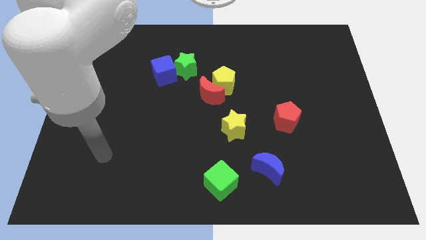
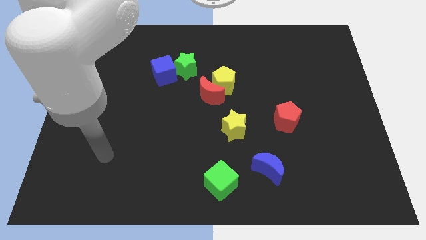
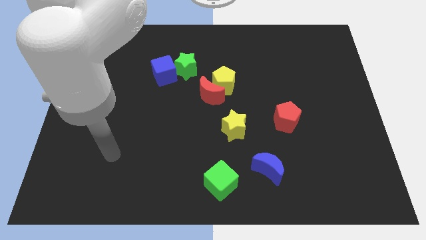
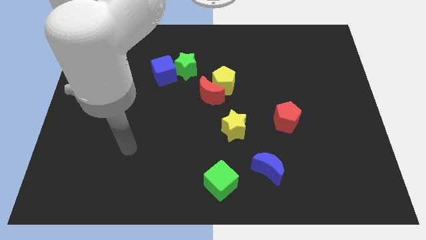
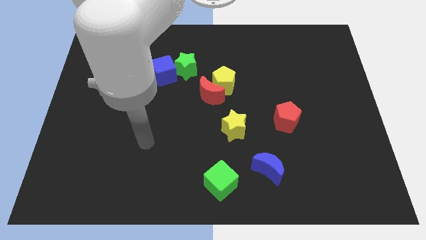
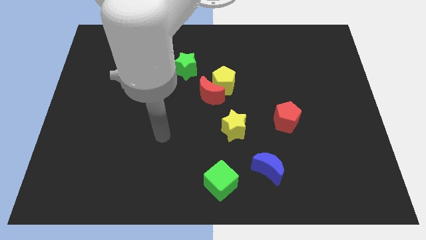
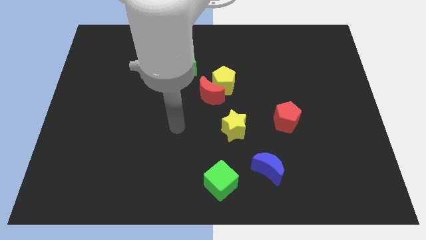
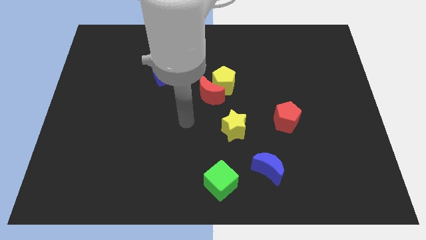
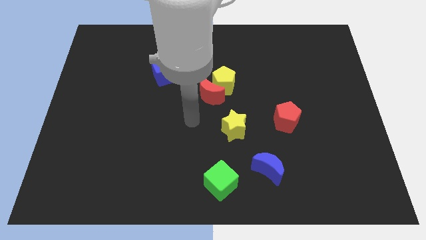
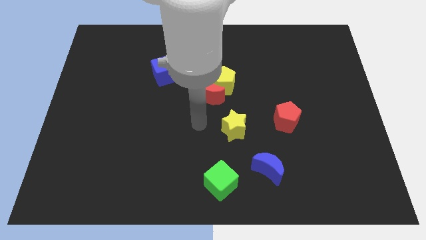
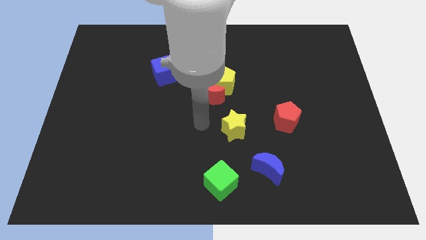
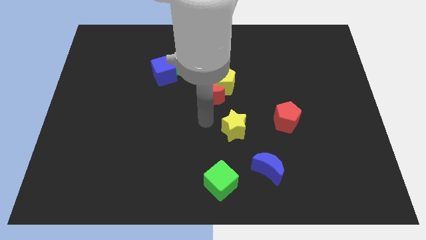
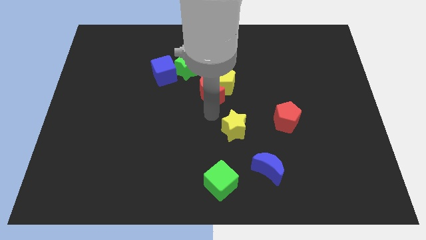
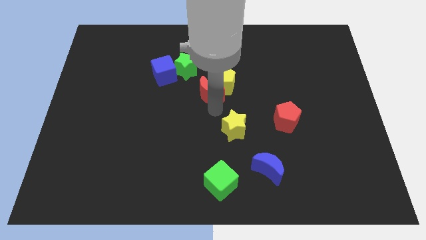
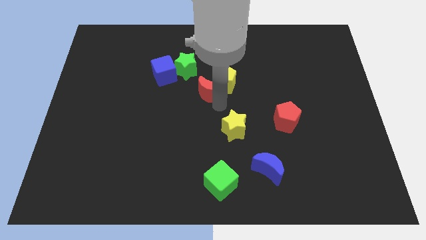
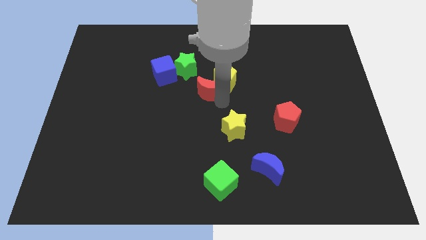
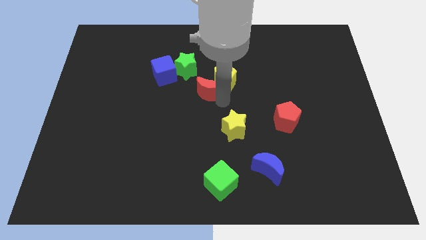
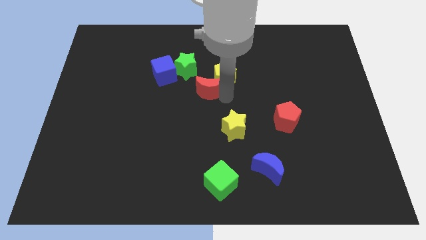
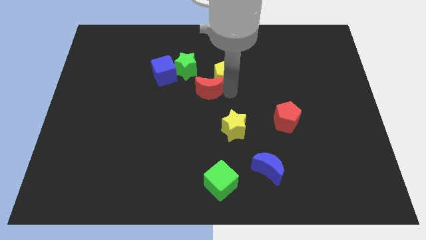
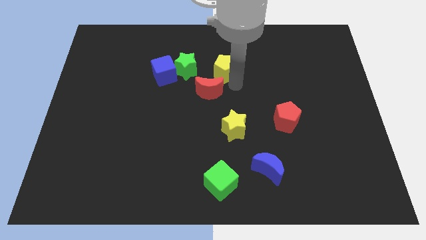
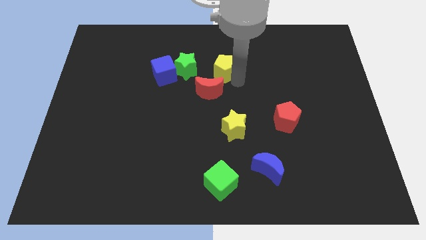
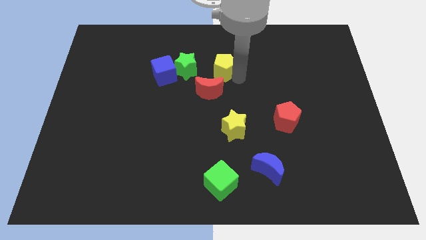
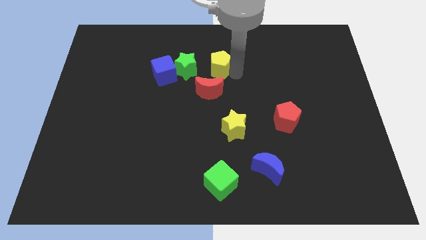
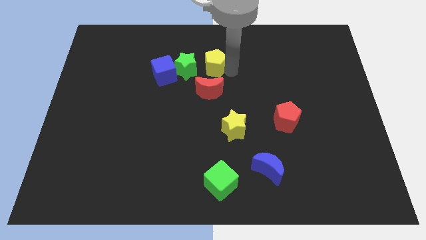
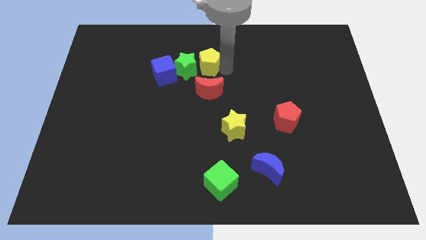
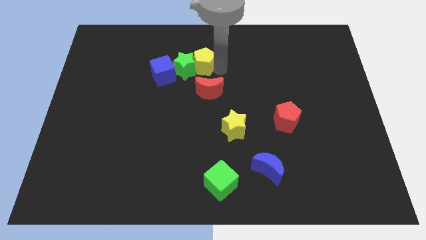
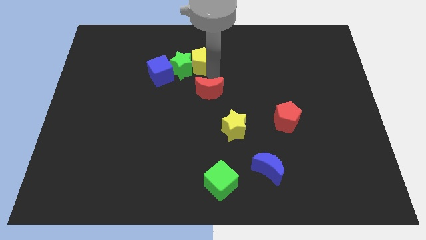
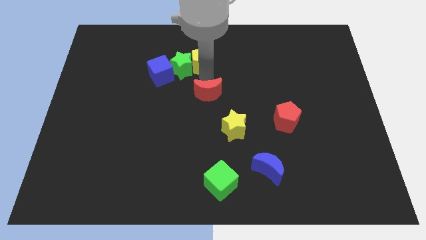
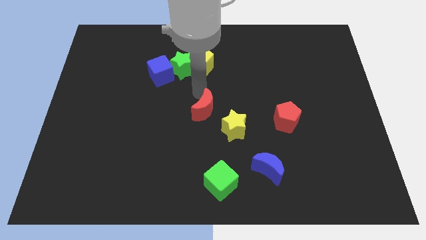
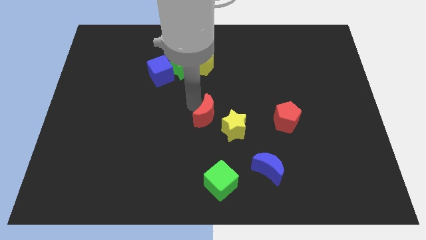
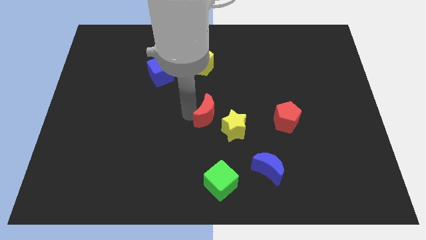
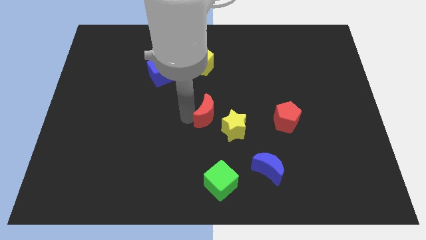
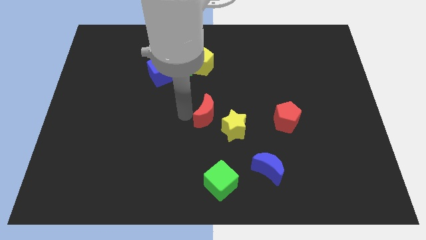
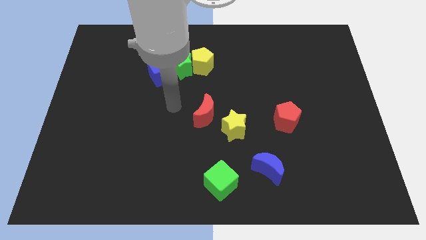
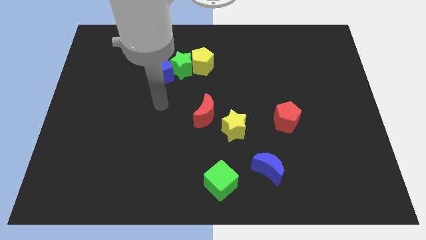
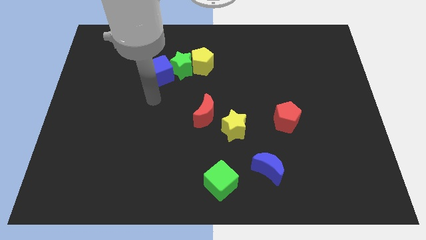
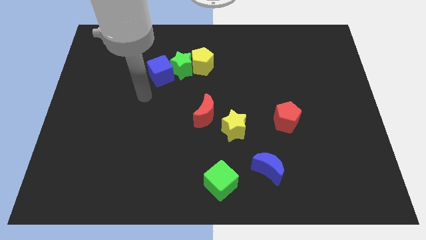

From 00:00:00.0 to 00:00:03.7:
separate red moon and the yellow pentagon

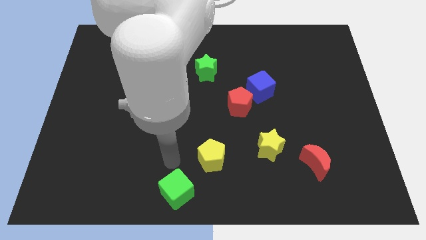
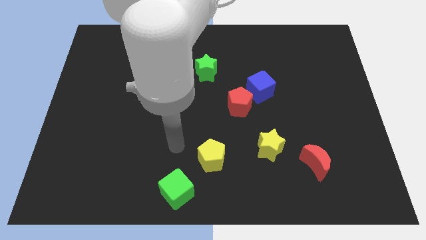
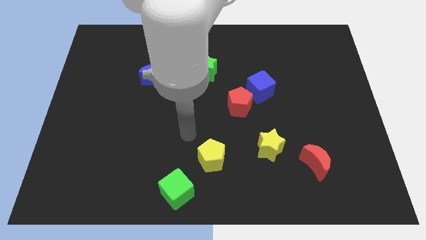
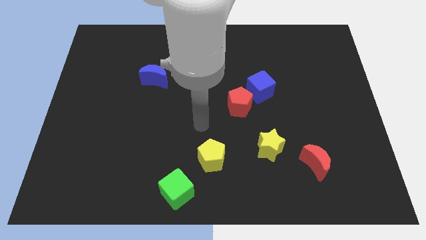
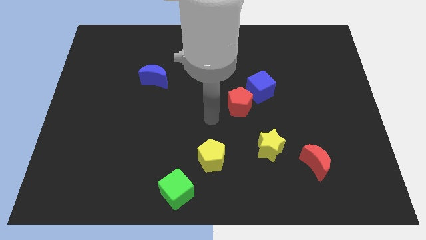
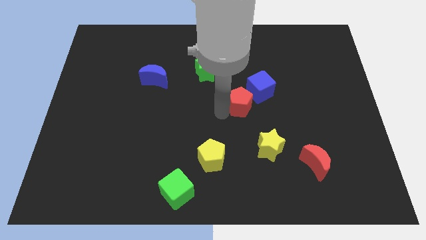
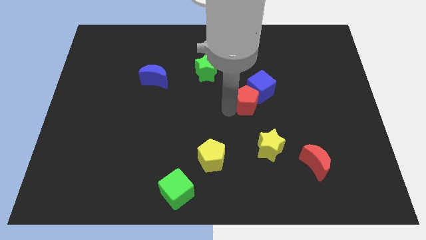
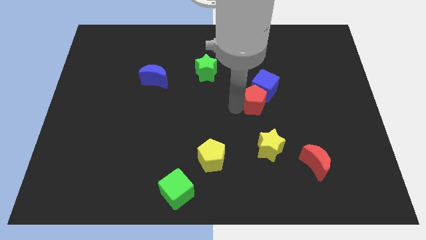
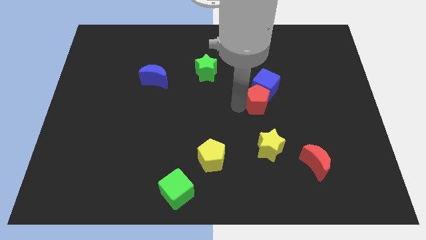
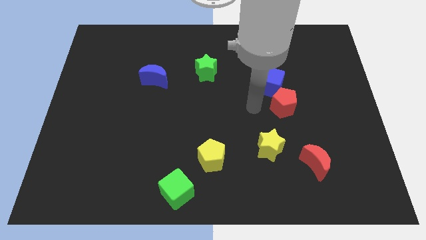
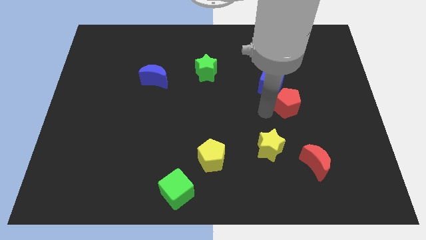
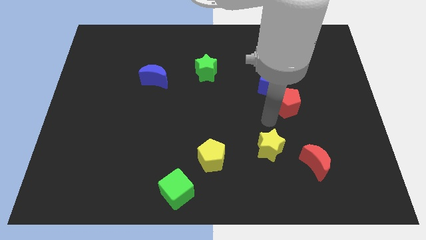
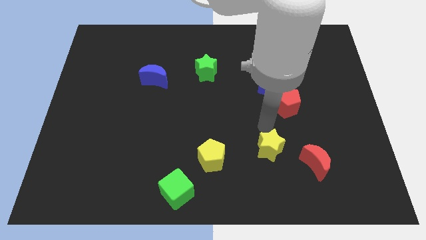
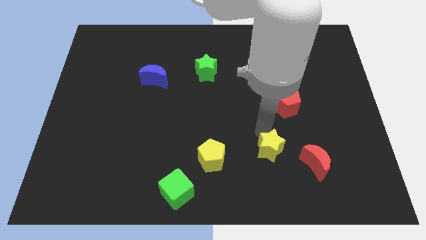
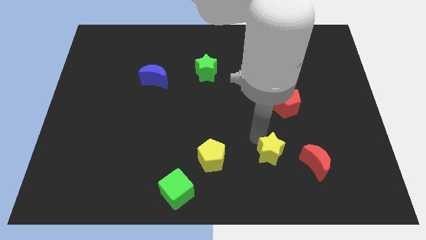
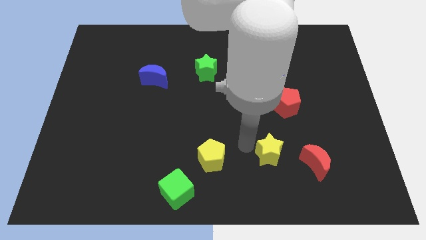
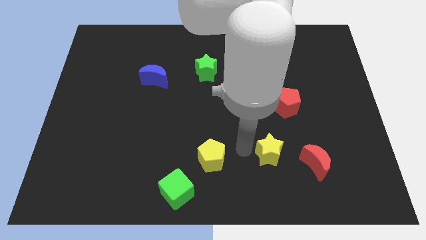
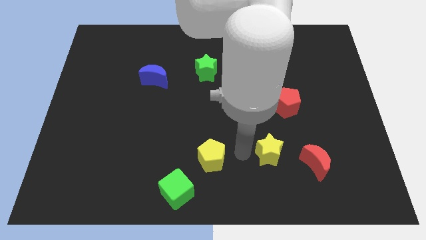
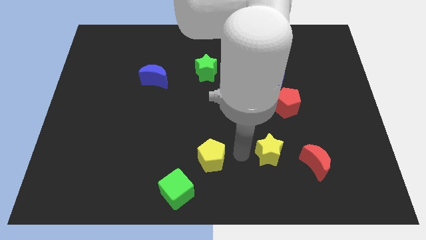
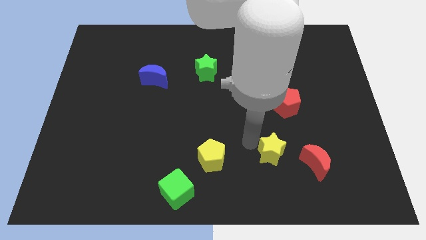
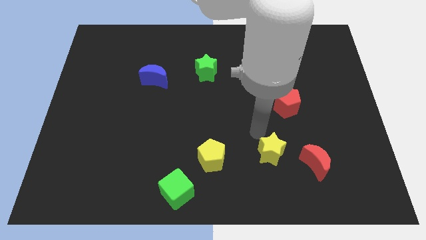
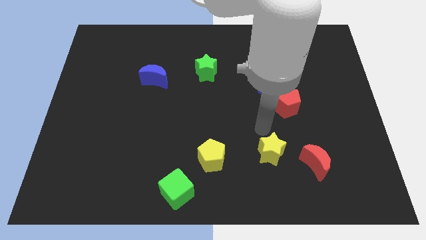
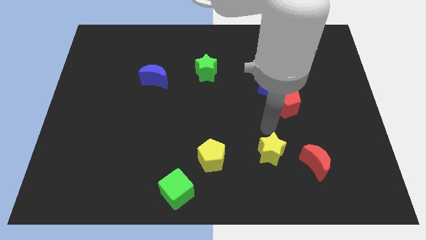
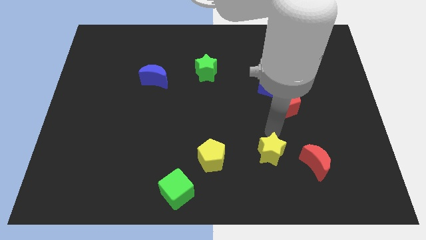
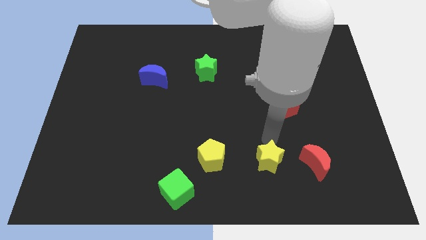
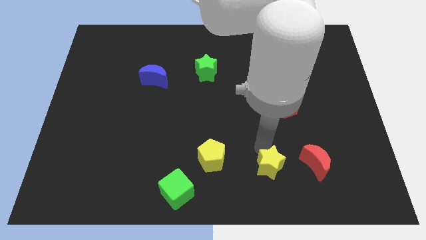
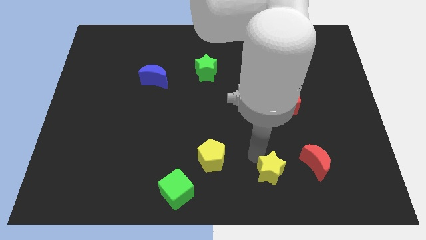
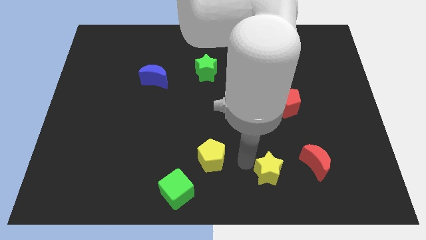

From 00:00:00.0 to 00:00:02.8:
move yellow star slightly to the bottom side

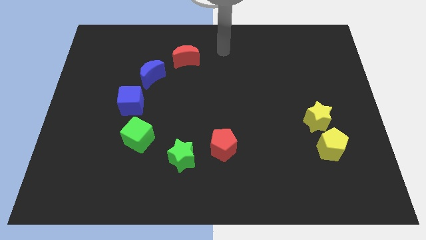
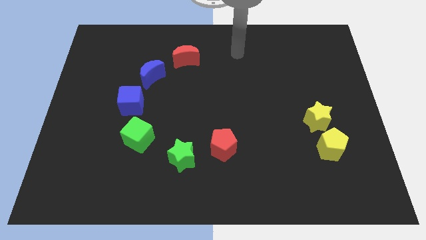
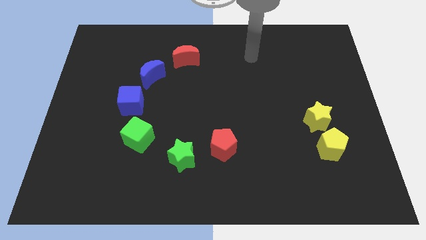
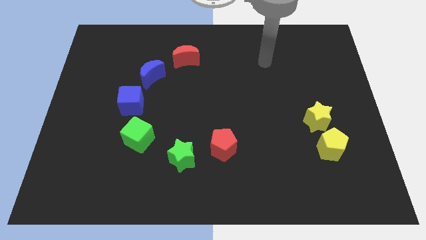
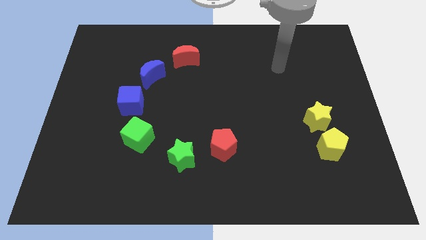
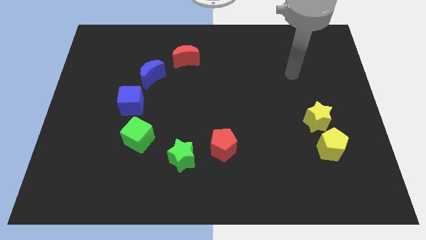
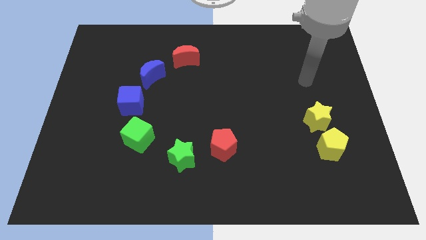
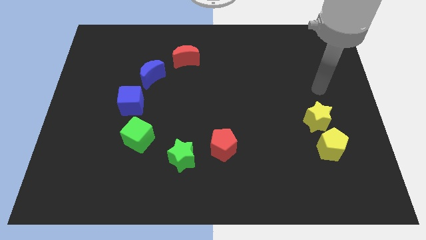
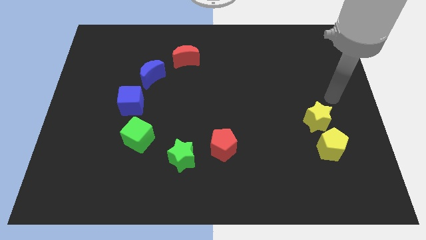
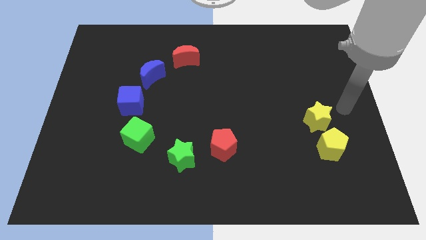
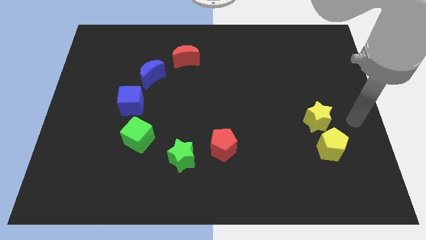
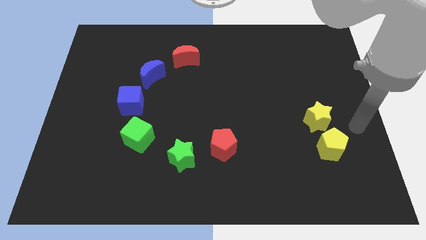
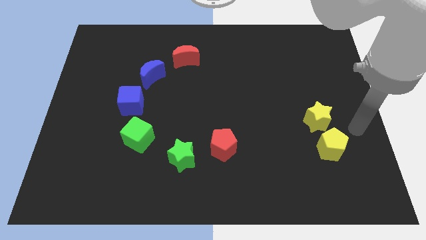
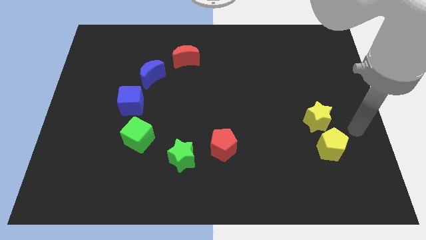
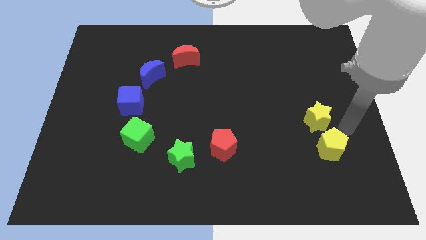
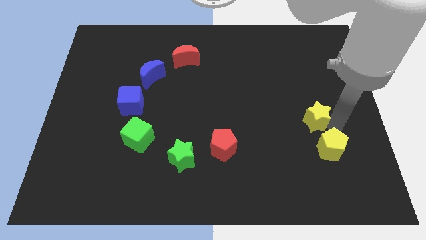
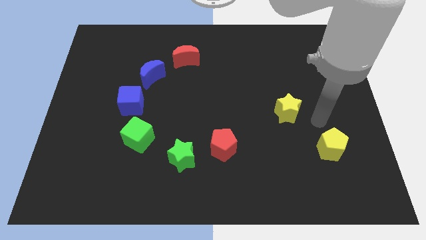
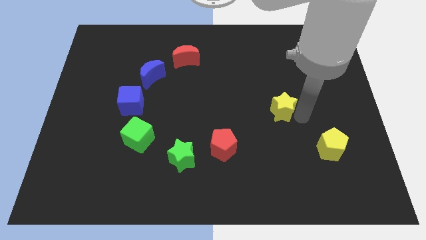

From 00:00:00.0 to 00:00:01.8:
move the arm towards the yellow star

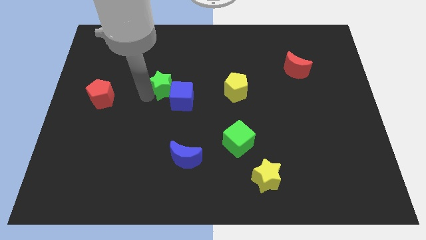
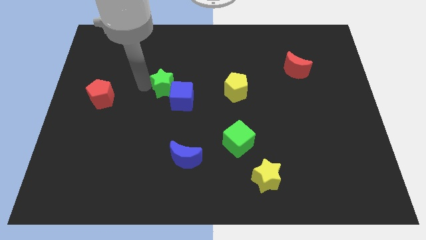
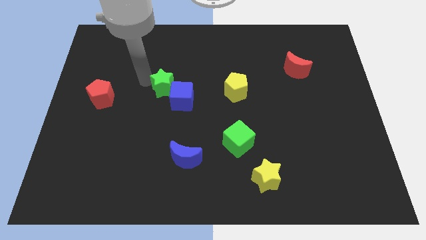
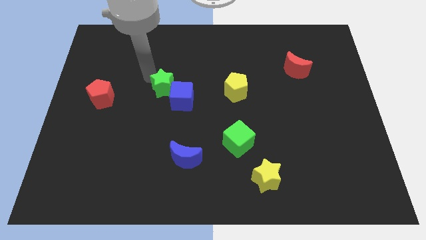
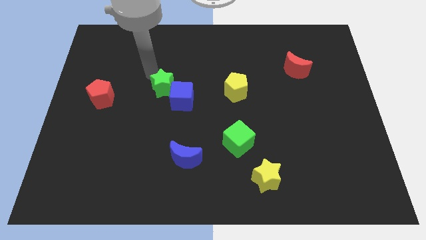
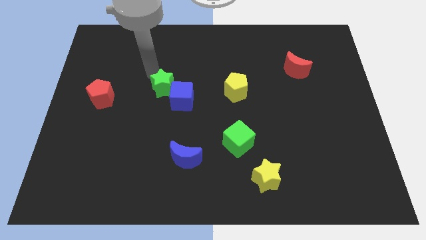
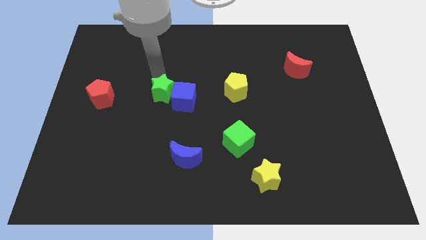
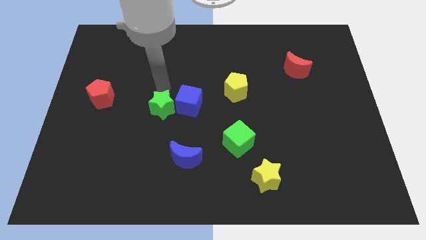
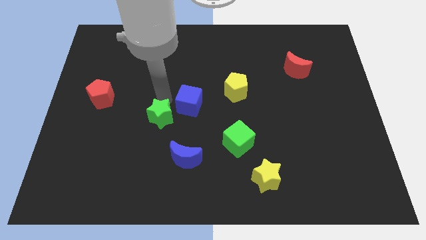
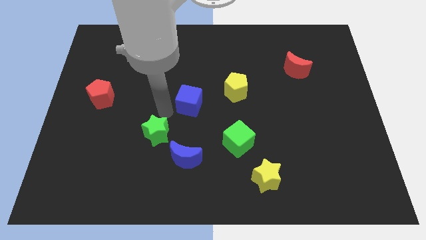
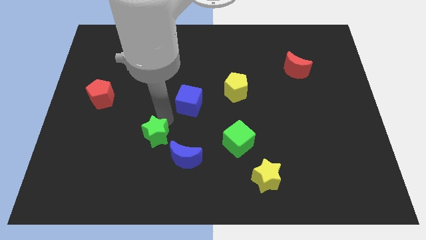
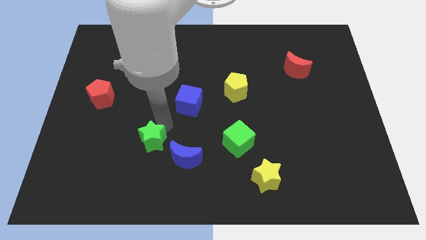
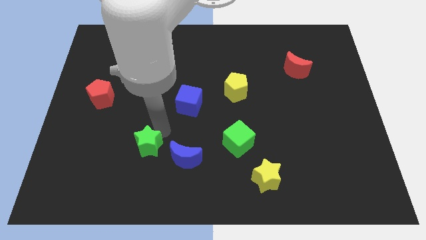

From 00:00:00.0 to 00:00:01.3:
push the green star left to the blue crescent
